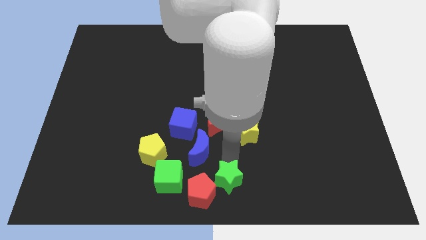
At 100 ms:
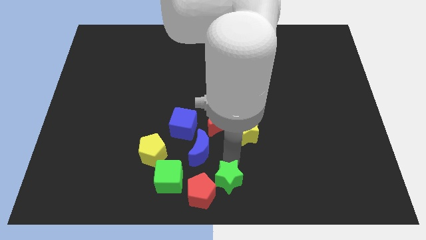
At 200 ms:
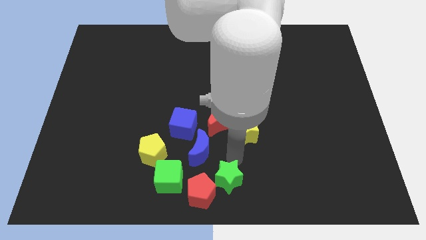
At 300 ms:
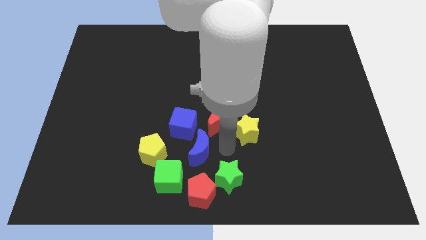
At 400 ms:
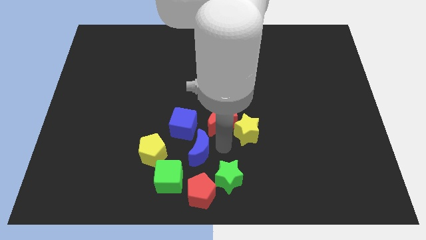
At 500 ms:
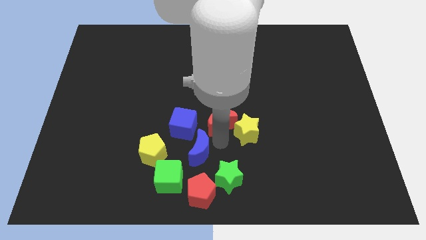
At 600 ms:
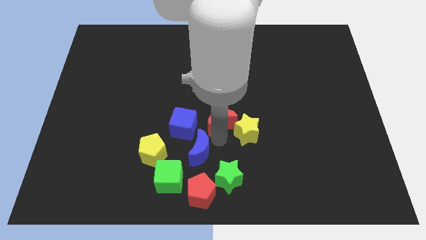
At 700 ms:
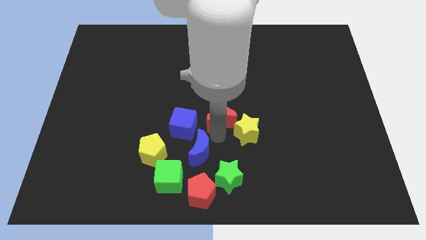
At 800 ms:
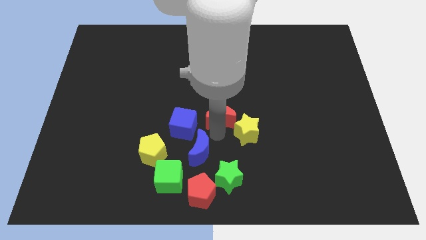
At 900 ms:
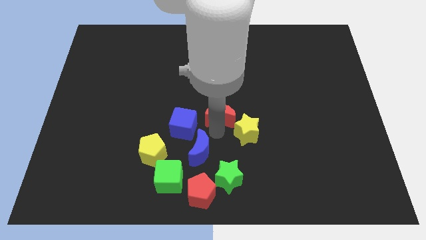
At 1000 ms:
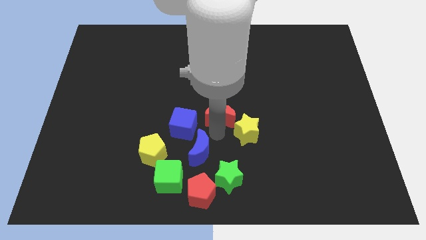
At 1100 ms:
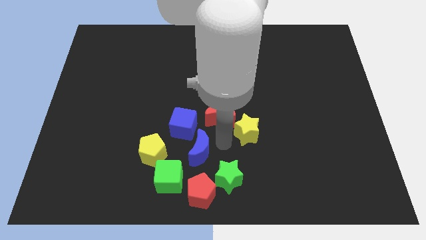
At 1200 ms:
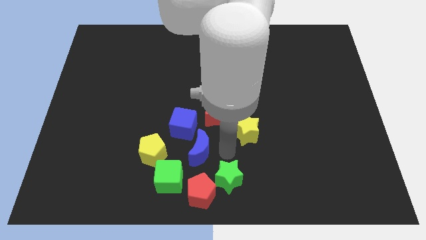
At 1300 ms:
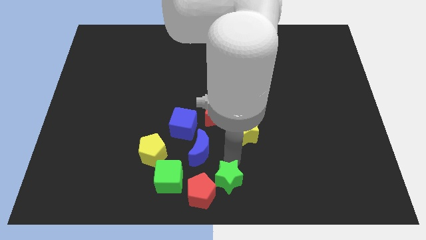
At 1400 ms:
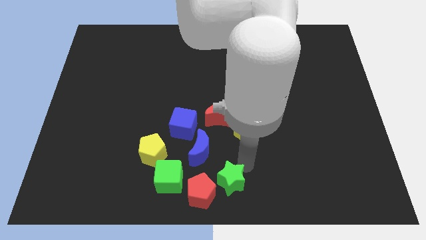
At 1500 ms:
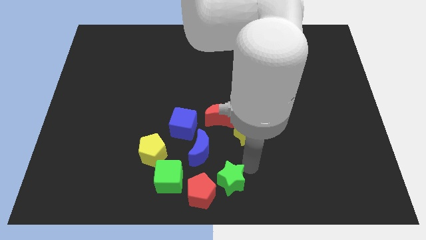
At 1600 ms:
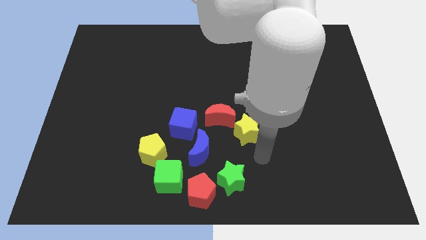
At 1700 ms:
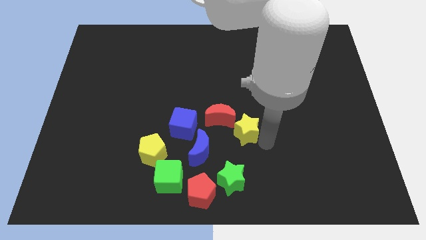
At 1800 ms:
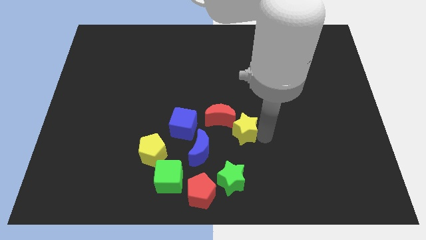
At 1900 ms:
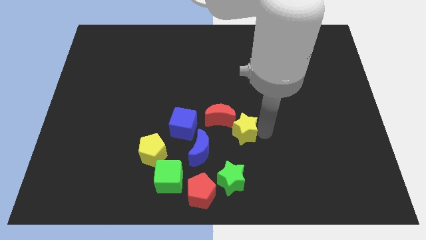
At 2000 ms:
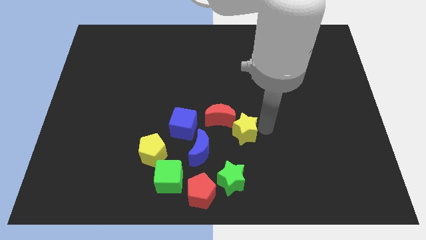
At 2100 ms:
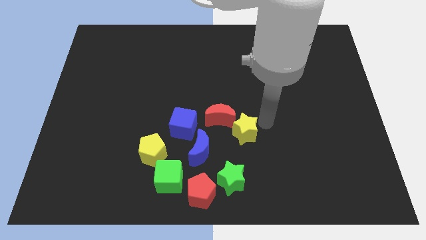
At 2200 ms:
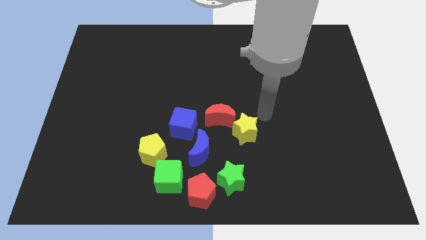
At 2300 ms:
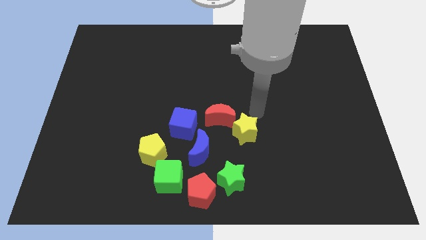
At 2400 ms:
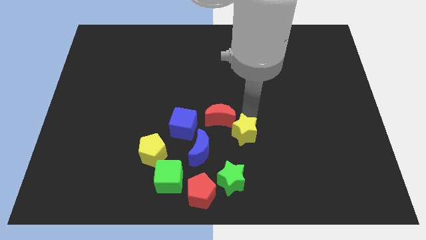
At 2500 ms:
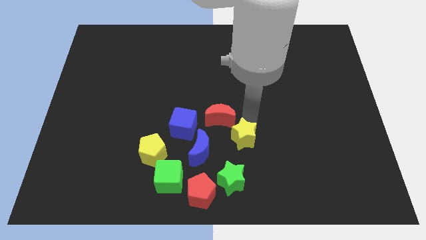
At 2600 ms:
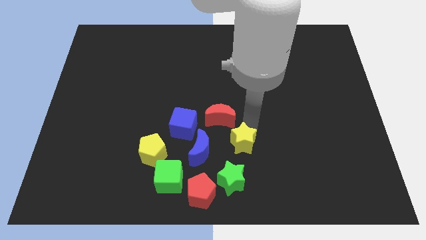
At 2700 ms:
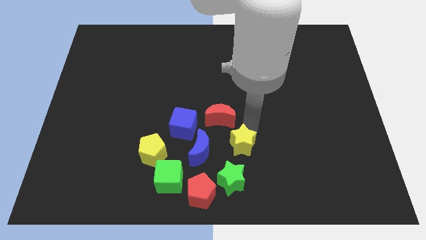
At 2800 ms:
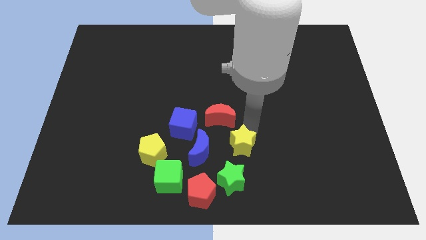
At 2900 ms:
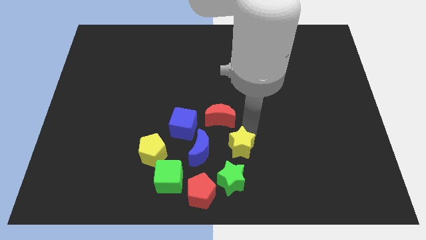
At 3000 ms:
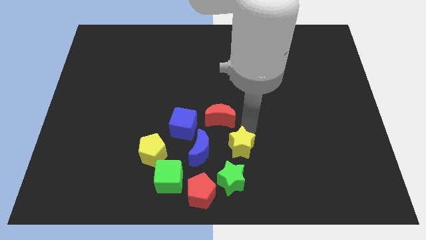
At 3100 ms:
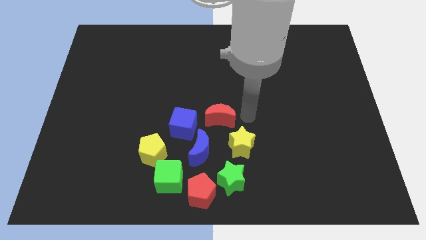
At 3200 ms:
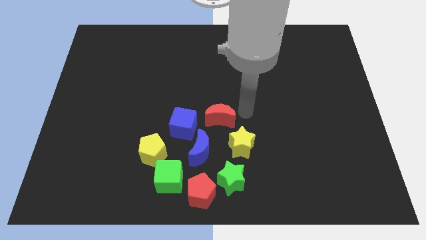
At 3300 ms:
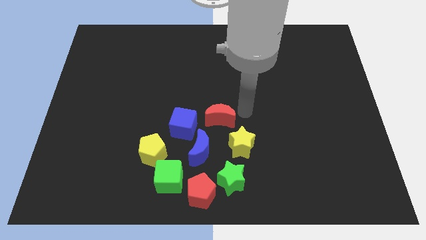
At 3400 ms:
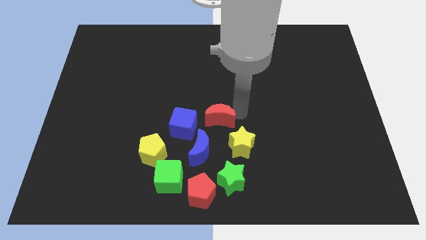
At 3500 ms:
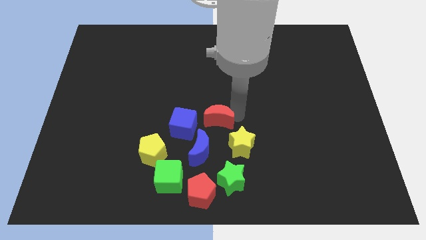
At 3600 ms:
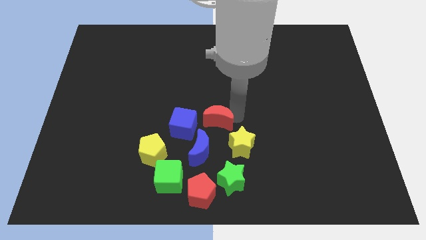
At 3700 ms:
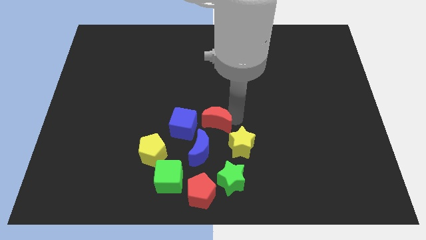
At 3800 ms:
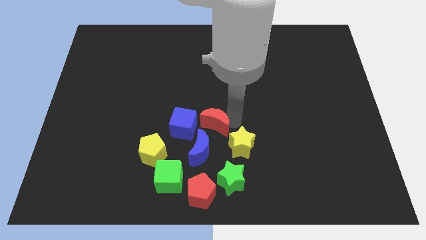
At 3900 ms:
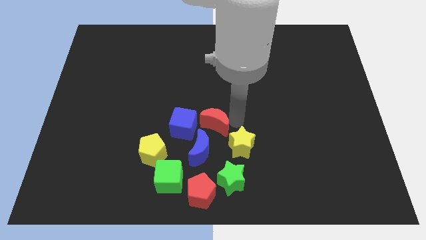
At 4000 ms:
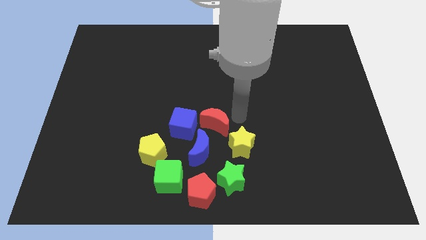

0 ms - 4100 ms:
move your arm away from the green star

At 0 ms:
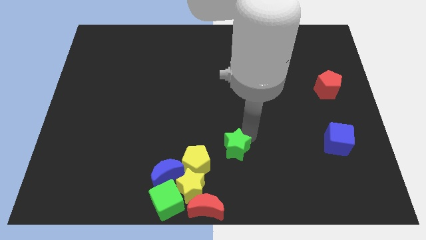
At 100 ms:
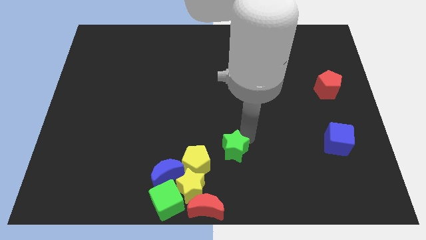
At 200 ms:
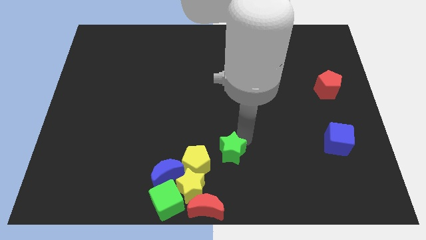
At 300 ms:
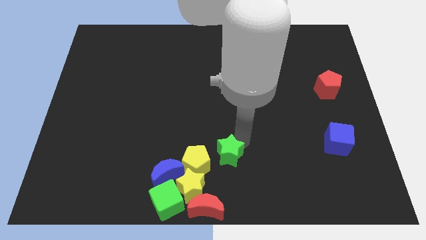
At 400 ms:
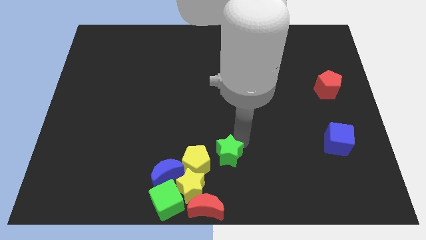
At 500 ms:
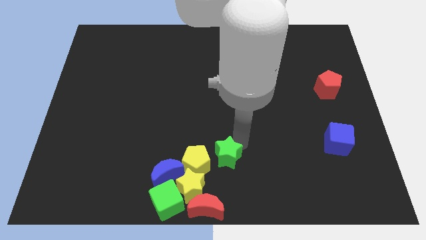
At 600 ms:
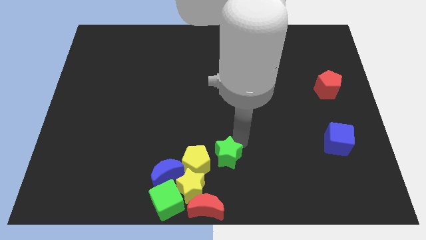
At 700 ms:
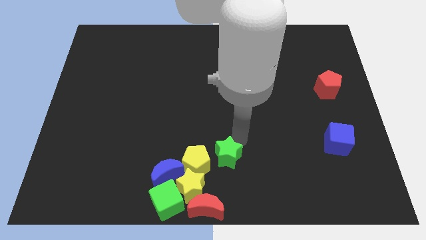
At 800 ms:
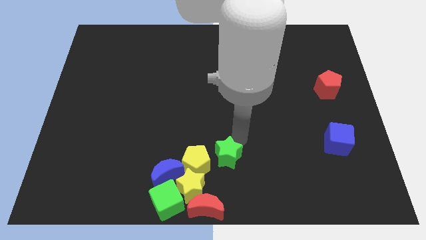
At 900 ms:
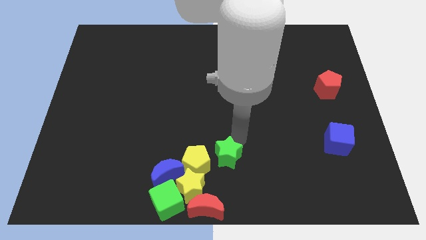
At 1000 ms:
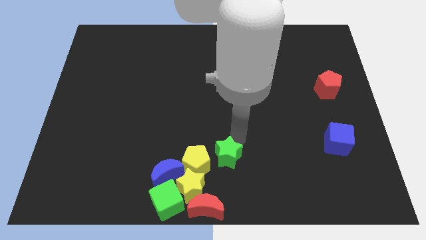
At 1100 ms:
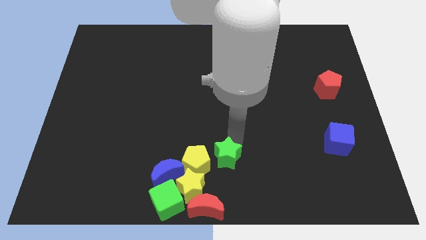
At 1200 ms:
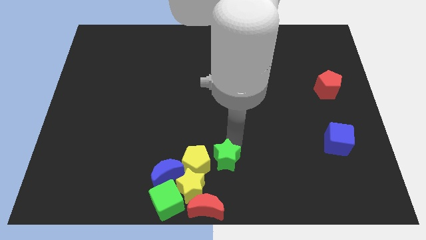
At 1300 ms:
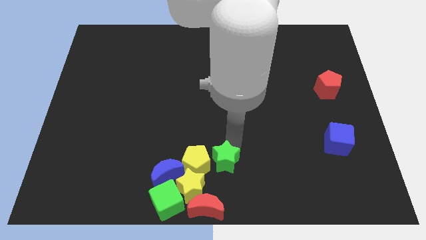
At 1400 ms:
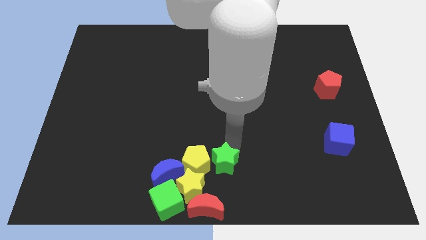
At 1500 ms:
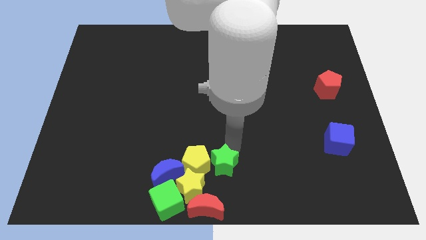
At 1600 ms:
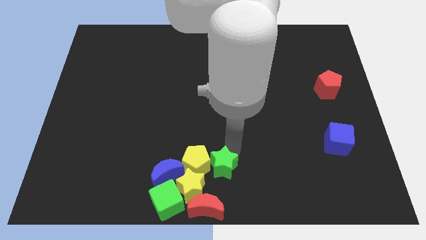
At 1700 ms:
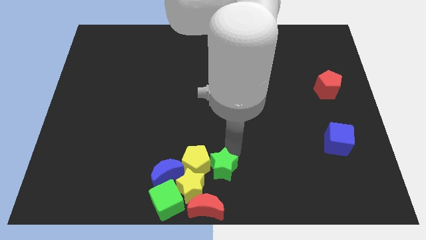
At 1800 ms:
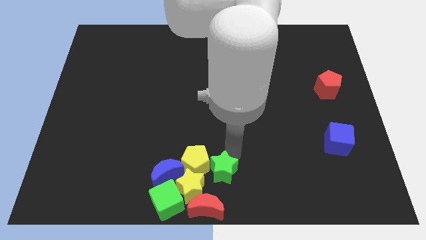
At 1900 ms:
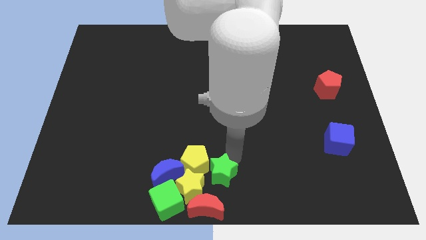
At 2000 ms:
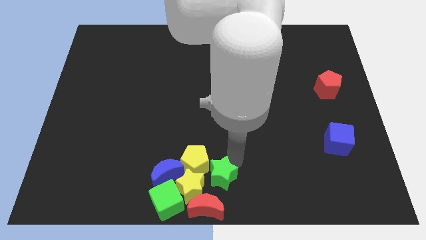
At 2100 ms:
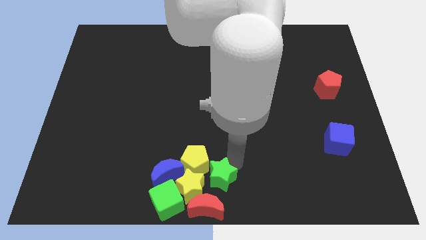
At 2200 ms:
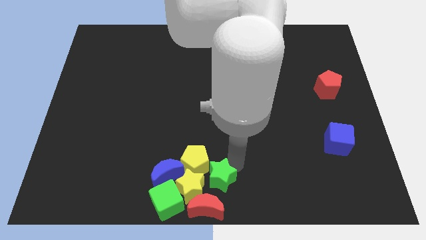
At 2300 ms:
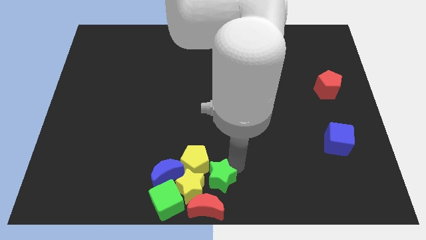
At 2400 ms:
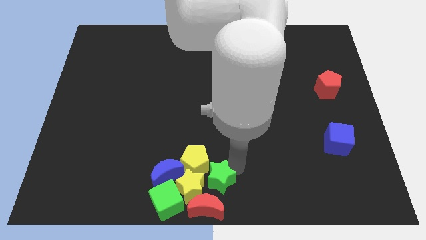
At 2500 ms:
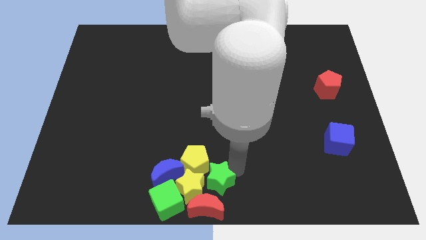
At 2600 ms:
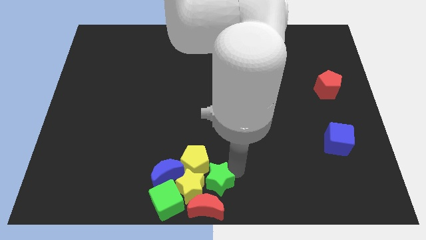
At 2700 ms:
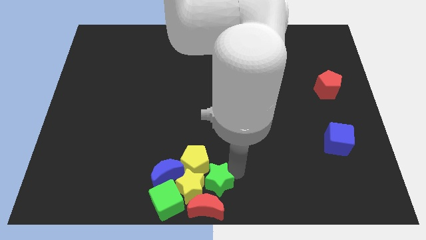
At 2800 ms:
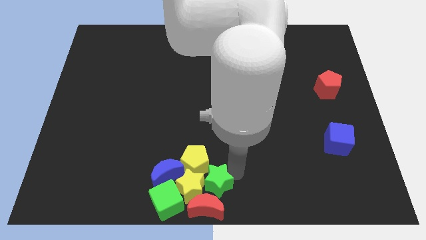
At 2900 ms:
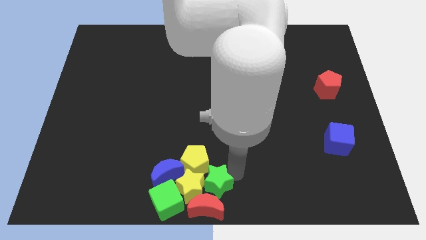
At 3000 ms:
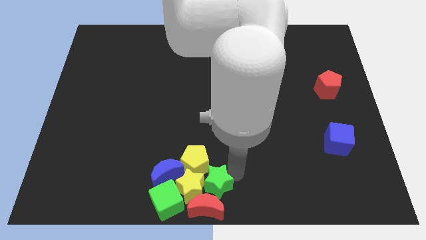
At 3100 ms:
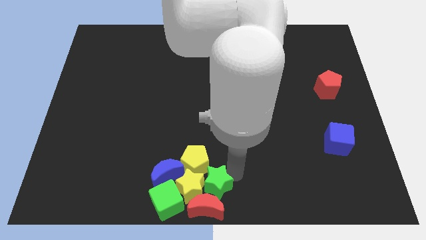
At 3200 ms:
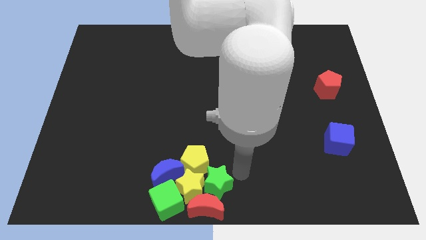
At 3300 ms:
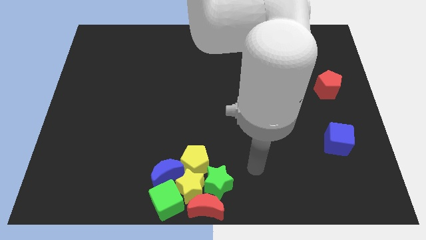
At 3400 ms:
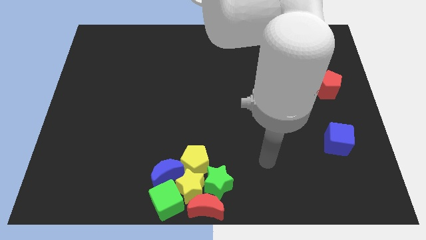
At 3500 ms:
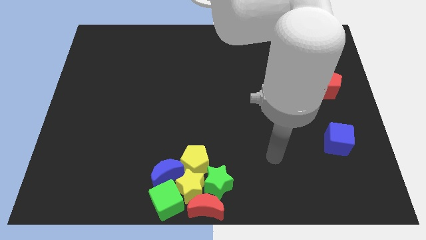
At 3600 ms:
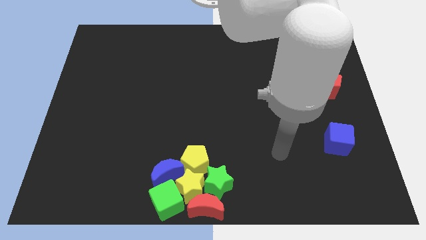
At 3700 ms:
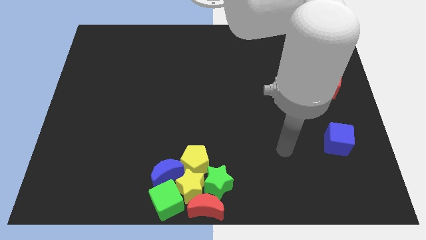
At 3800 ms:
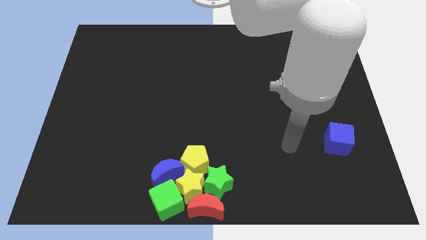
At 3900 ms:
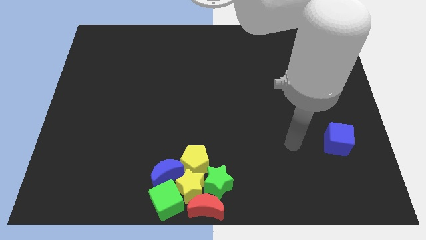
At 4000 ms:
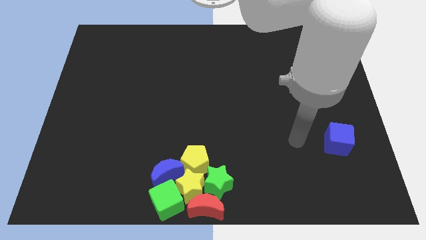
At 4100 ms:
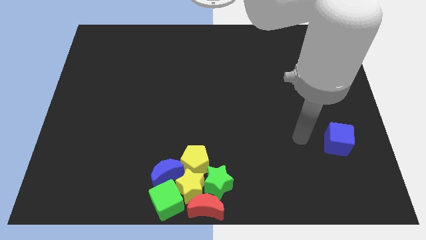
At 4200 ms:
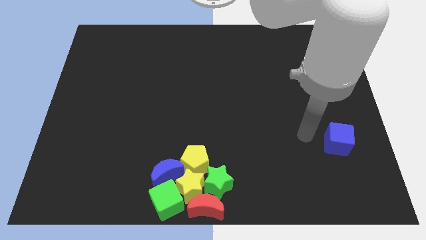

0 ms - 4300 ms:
push the green star into the yellow star

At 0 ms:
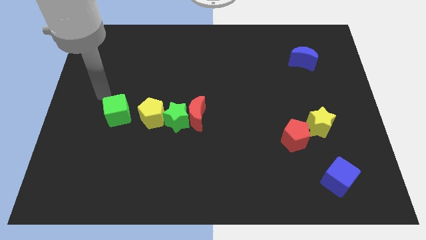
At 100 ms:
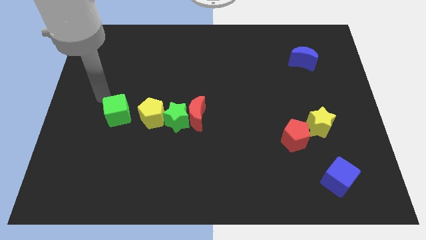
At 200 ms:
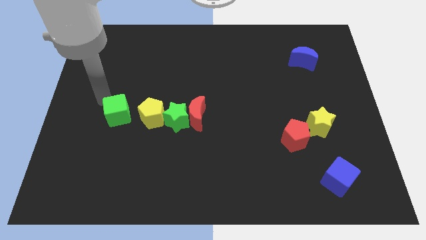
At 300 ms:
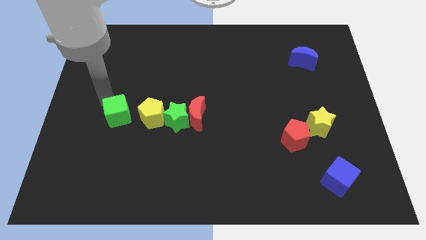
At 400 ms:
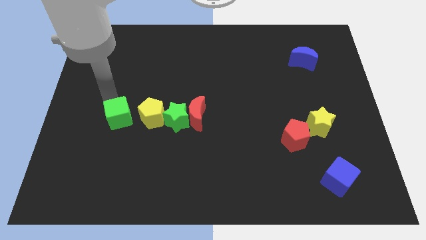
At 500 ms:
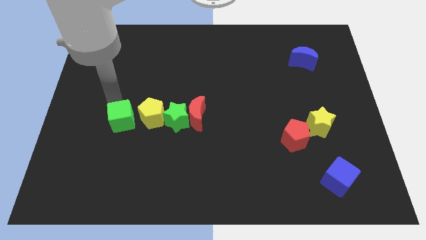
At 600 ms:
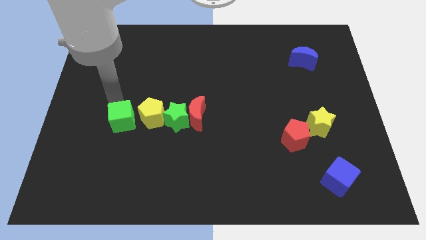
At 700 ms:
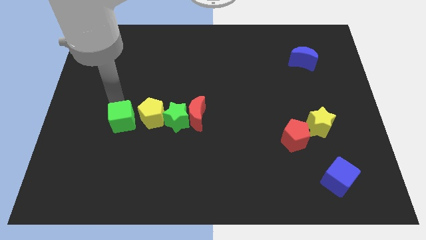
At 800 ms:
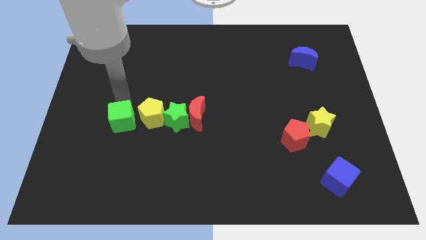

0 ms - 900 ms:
push the green cube slightly to the bottom
